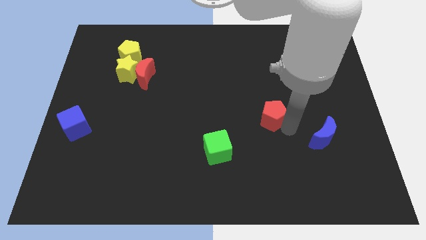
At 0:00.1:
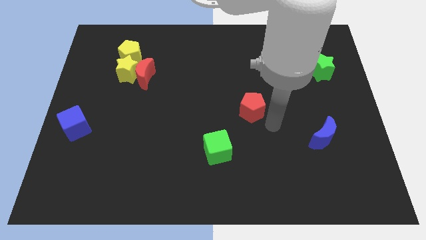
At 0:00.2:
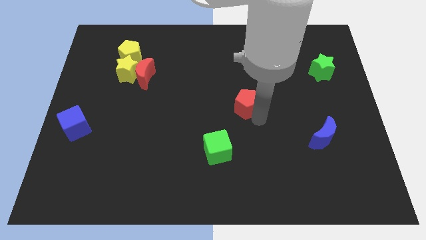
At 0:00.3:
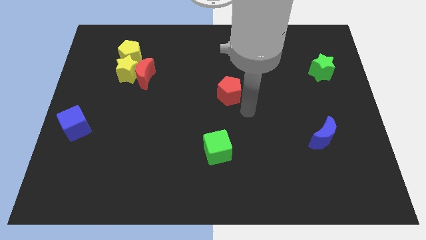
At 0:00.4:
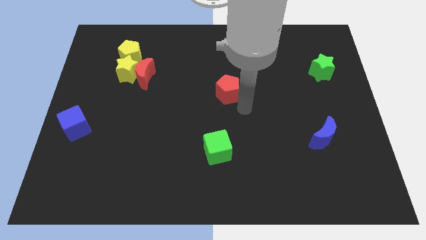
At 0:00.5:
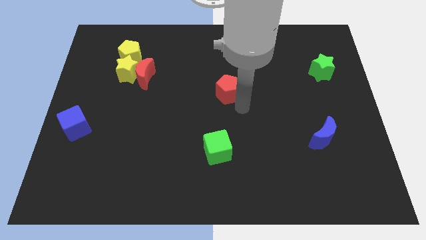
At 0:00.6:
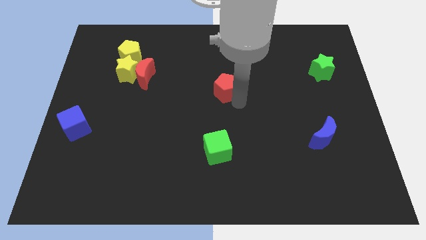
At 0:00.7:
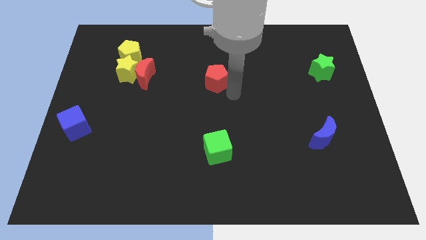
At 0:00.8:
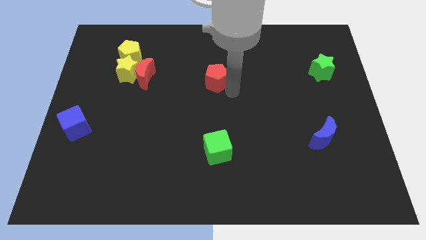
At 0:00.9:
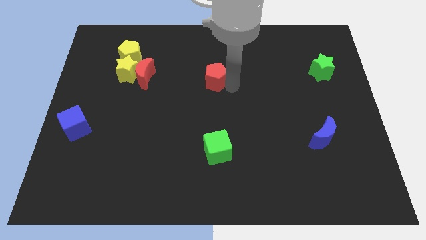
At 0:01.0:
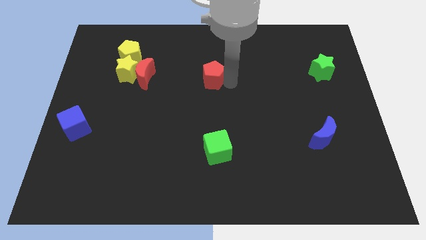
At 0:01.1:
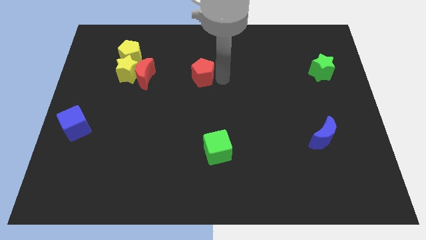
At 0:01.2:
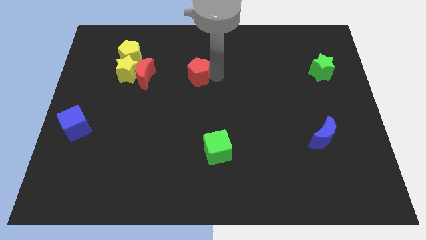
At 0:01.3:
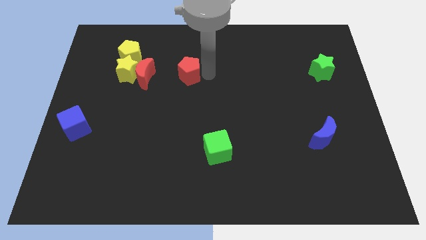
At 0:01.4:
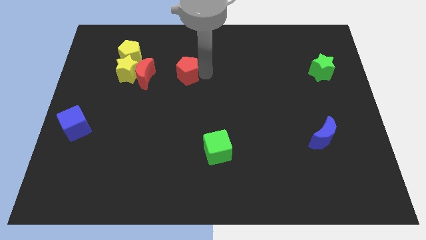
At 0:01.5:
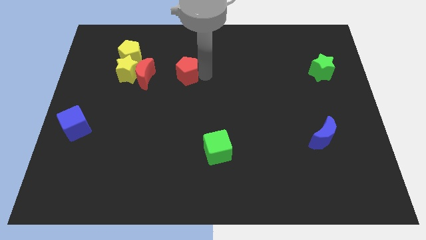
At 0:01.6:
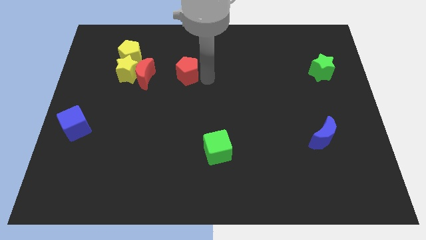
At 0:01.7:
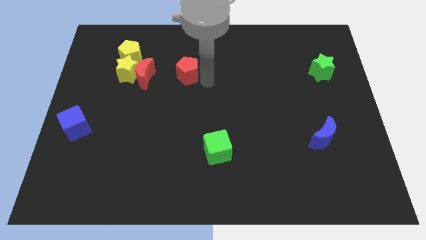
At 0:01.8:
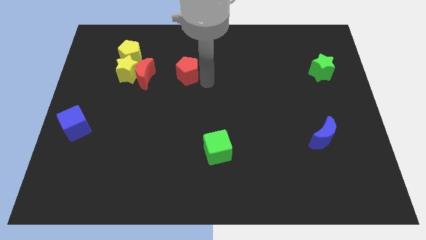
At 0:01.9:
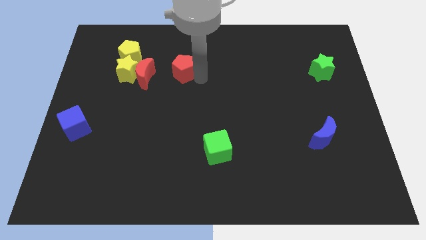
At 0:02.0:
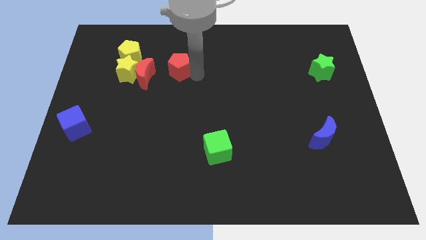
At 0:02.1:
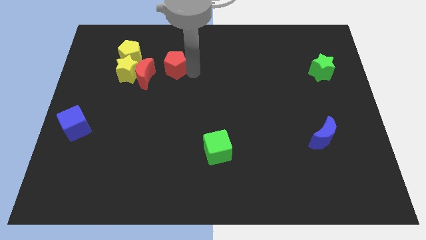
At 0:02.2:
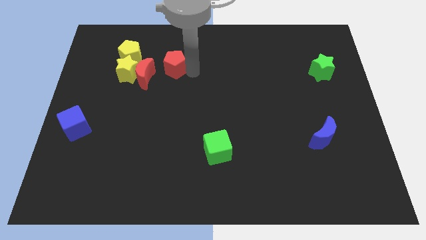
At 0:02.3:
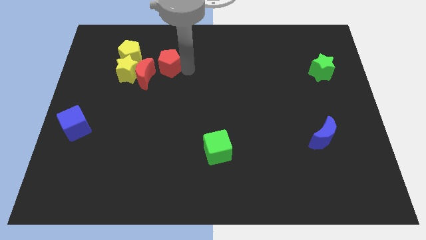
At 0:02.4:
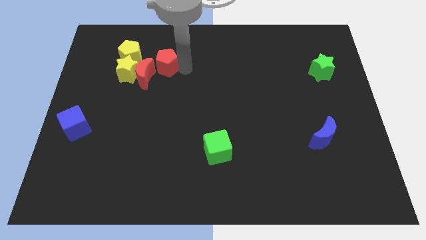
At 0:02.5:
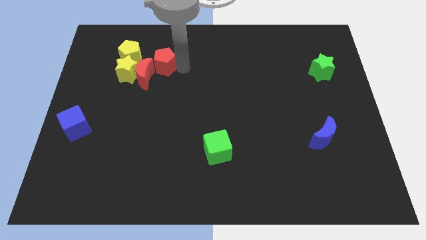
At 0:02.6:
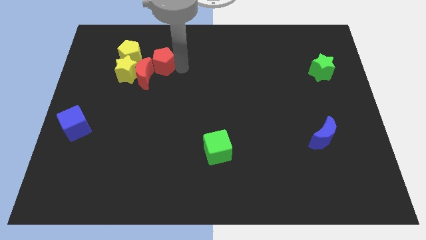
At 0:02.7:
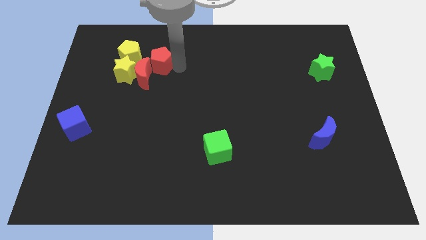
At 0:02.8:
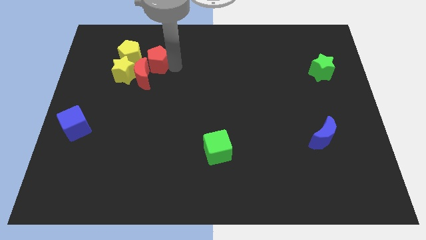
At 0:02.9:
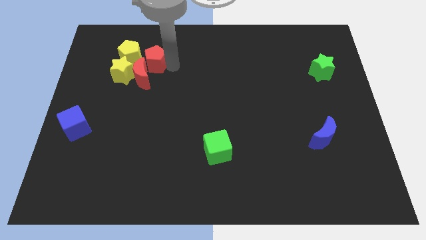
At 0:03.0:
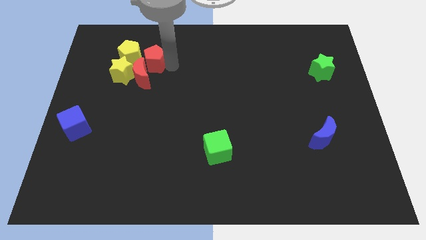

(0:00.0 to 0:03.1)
push the red pentagon to the top right of the red crescent

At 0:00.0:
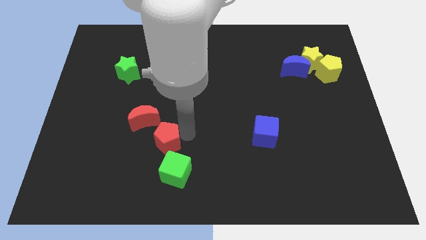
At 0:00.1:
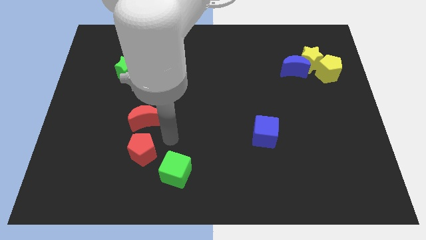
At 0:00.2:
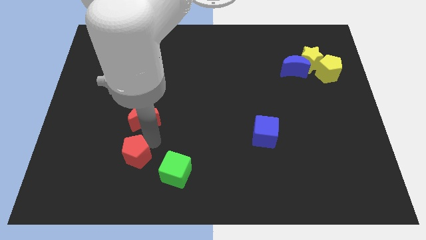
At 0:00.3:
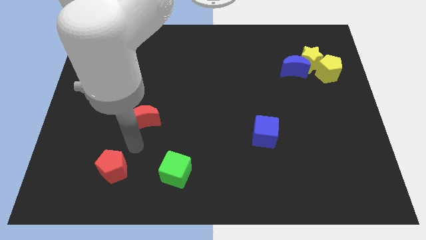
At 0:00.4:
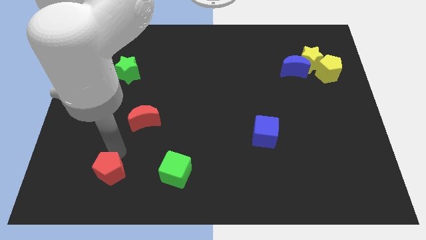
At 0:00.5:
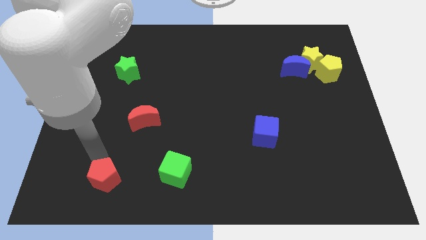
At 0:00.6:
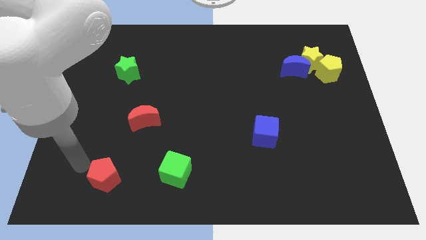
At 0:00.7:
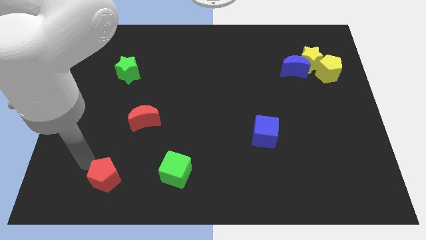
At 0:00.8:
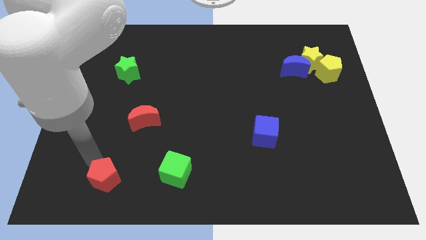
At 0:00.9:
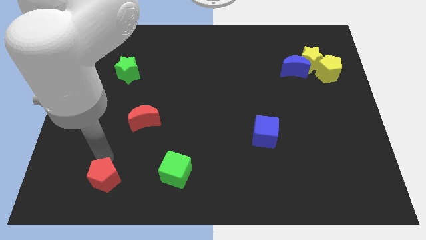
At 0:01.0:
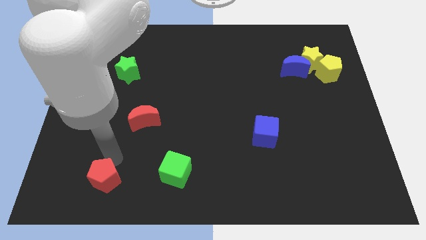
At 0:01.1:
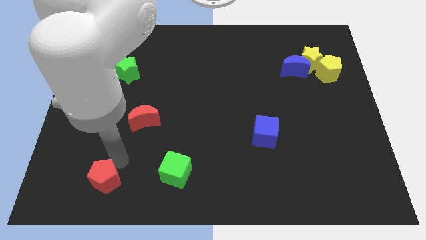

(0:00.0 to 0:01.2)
place the red pentagon parallel to the green cube

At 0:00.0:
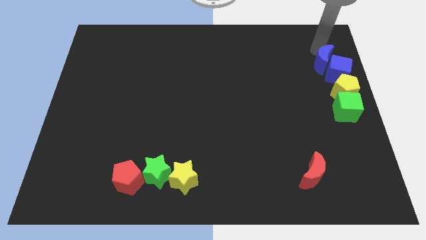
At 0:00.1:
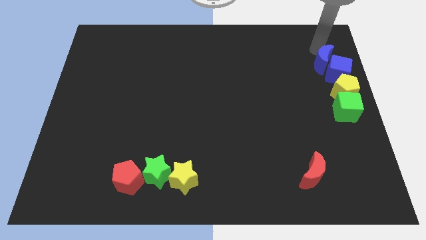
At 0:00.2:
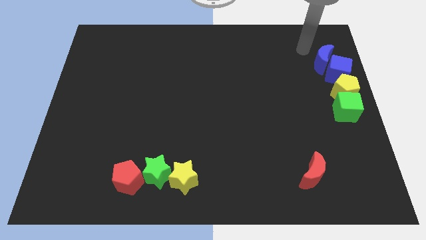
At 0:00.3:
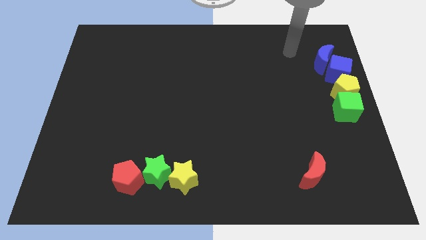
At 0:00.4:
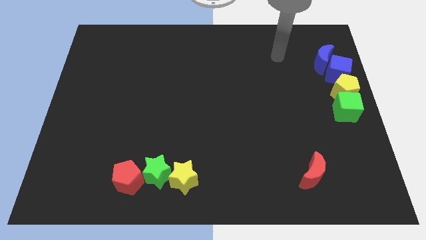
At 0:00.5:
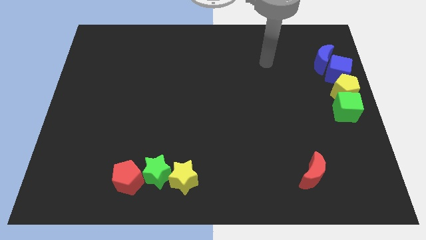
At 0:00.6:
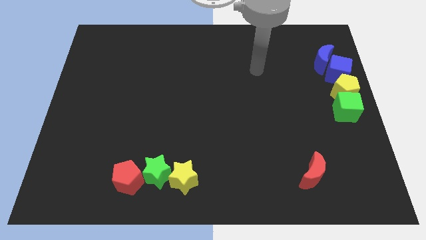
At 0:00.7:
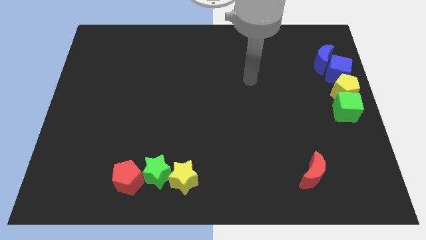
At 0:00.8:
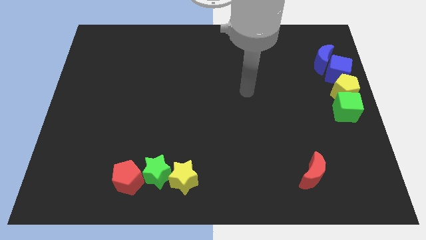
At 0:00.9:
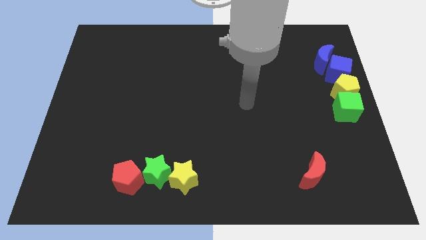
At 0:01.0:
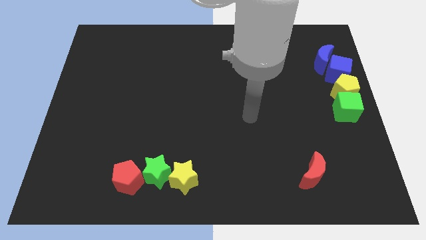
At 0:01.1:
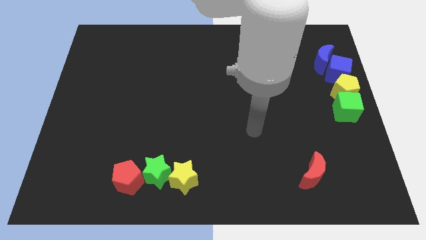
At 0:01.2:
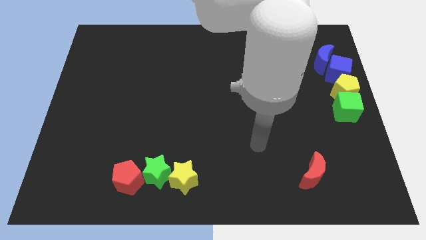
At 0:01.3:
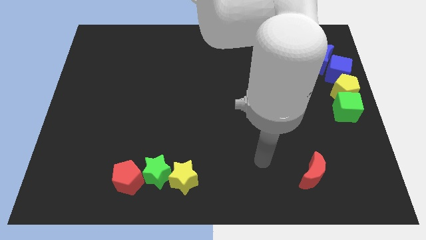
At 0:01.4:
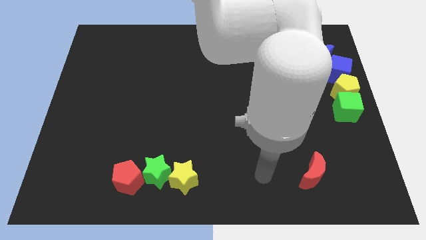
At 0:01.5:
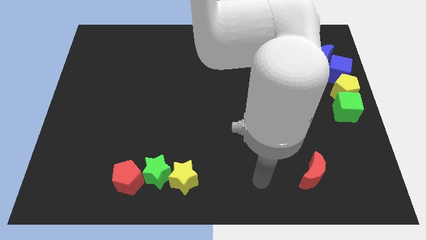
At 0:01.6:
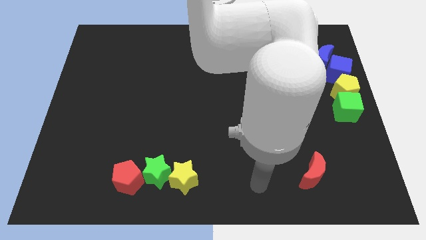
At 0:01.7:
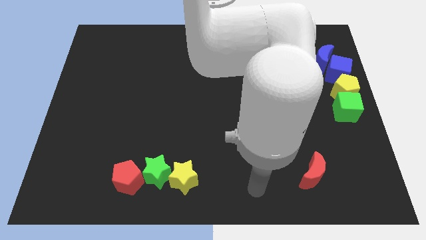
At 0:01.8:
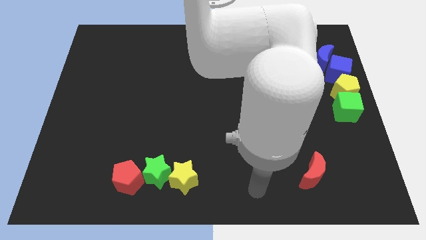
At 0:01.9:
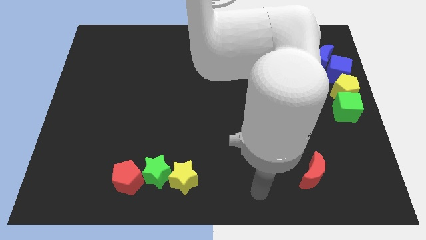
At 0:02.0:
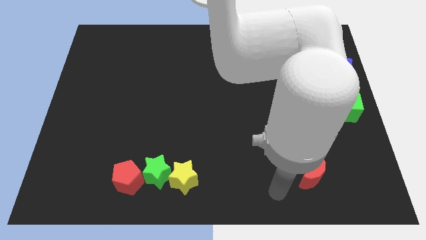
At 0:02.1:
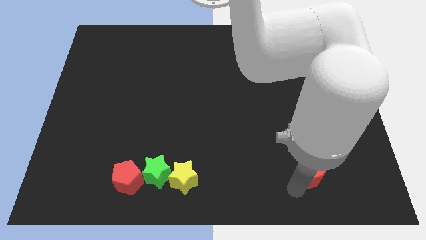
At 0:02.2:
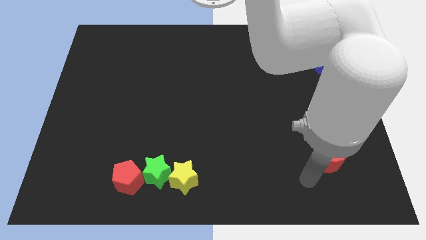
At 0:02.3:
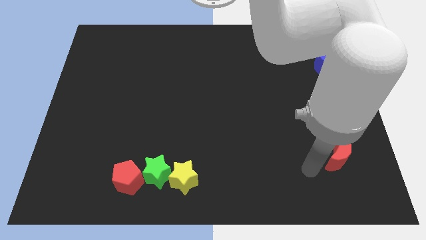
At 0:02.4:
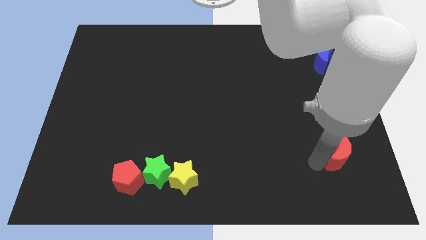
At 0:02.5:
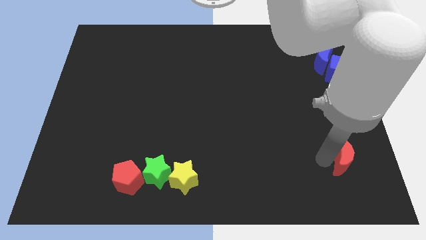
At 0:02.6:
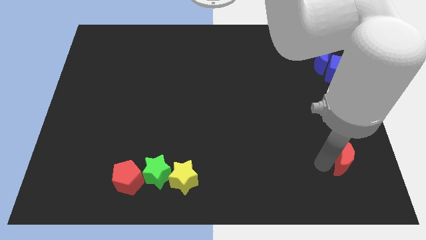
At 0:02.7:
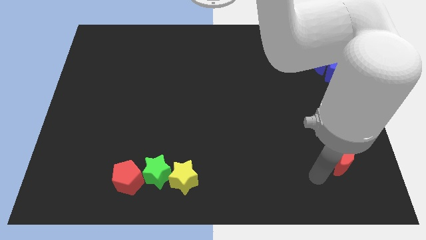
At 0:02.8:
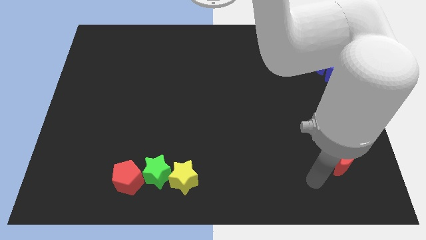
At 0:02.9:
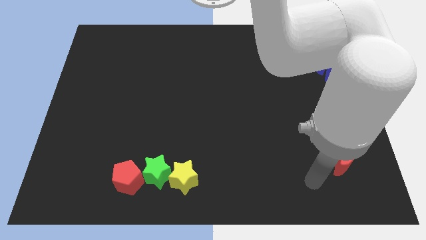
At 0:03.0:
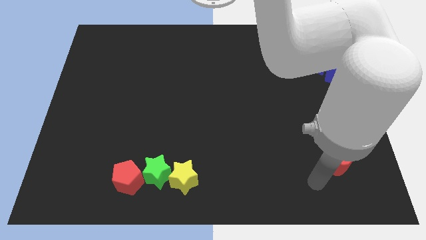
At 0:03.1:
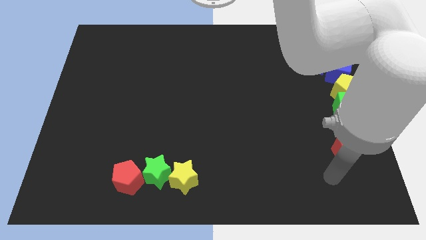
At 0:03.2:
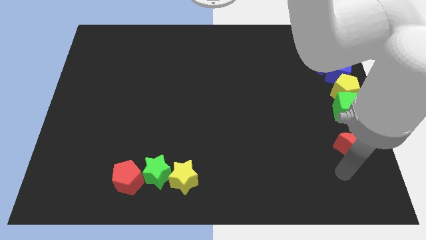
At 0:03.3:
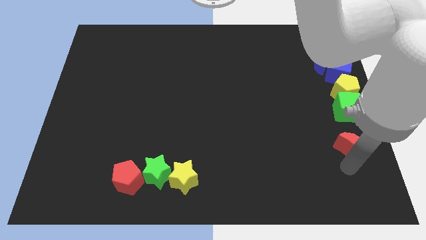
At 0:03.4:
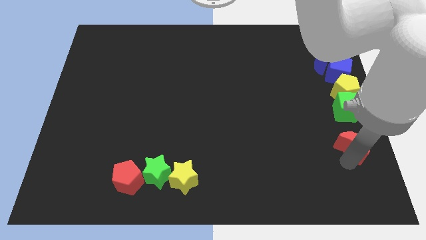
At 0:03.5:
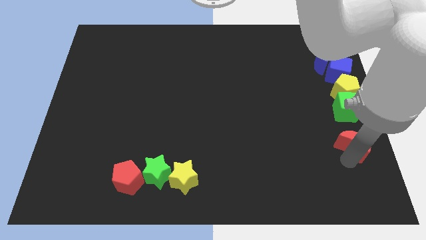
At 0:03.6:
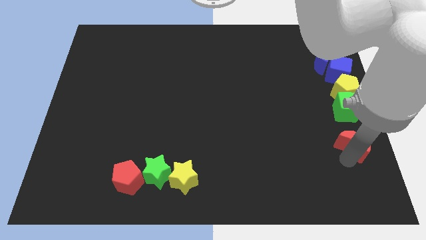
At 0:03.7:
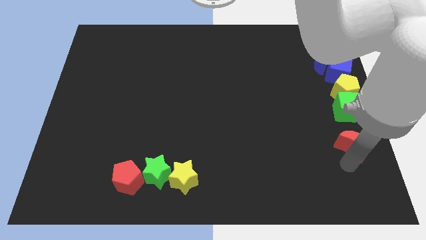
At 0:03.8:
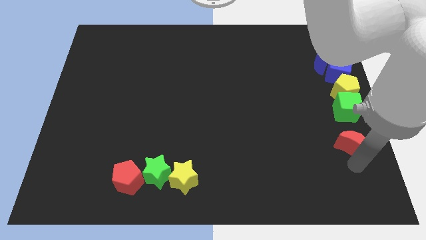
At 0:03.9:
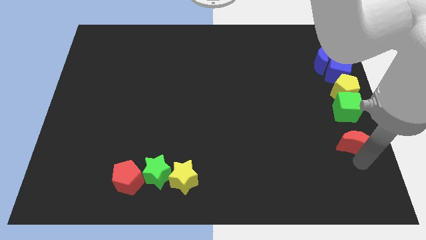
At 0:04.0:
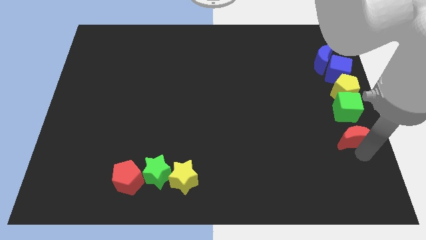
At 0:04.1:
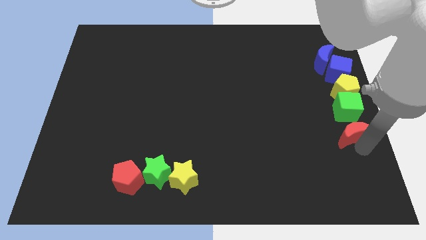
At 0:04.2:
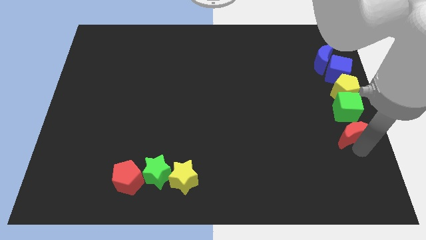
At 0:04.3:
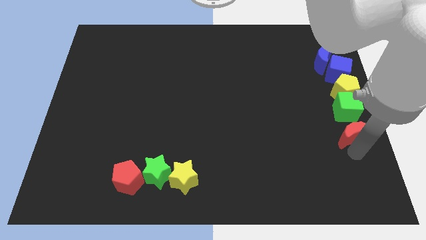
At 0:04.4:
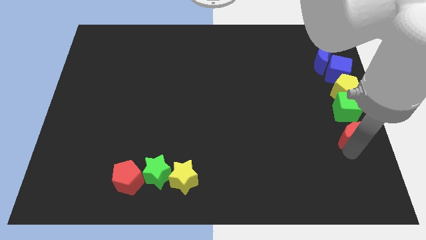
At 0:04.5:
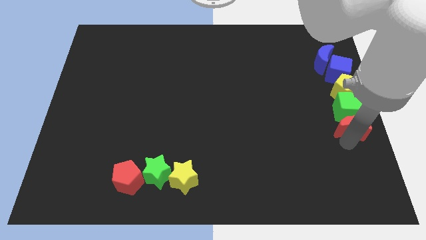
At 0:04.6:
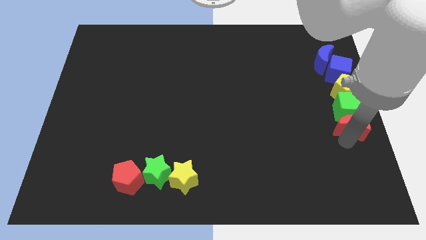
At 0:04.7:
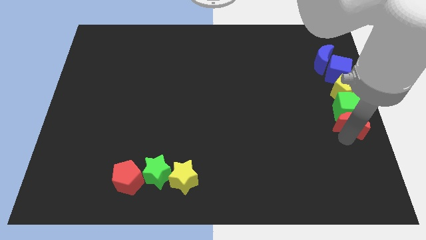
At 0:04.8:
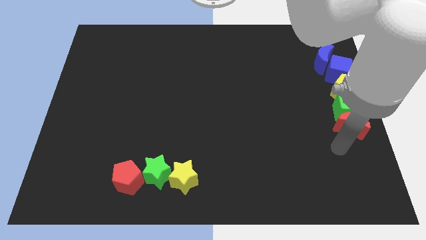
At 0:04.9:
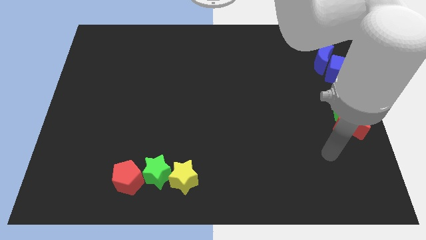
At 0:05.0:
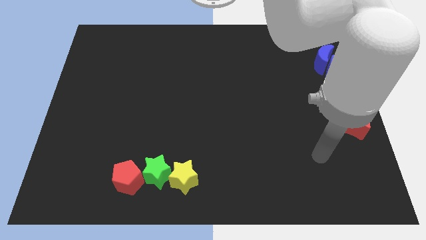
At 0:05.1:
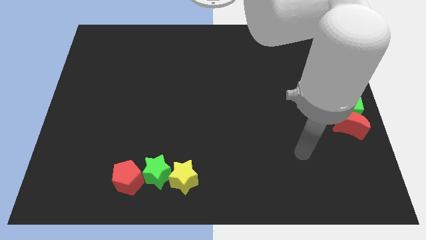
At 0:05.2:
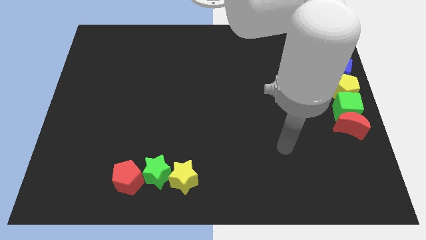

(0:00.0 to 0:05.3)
place the red crescent near the green cube
